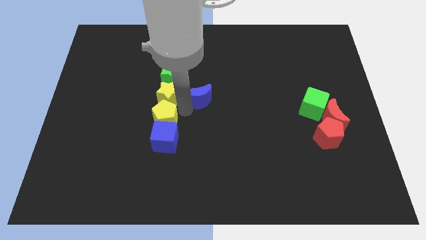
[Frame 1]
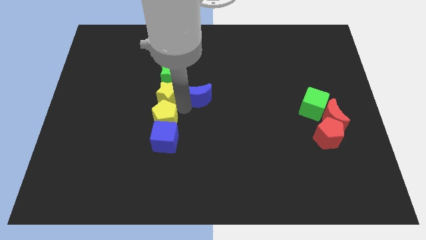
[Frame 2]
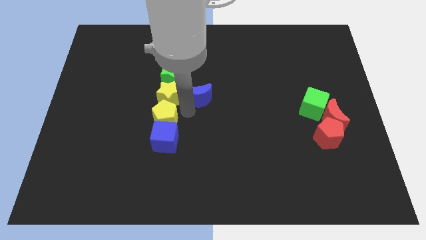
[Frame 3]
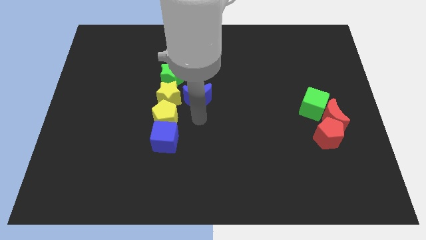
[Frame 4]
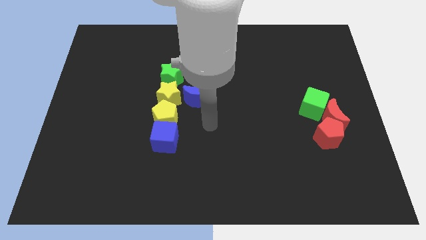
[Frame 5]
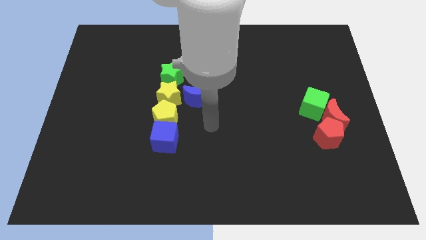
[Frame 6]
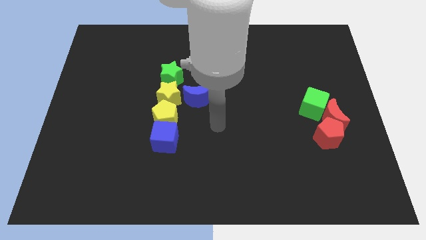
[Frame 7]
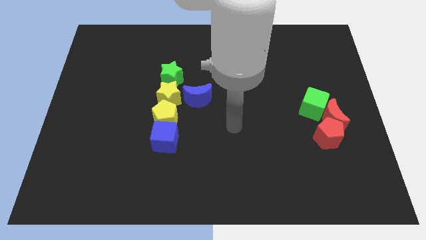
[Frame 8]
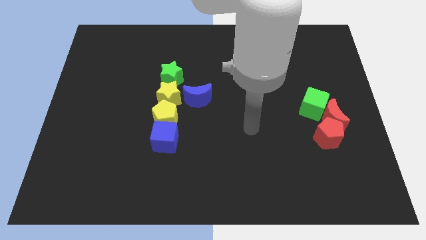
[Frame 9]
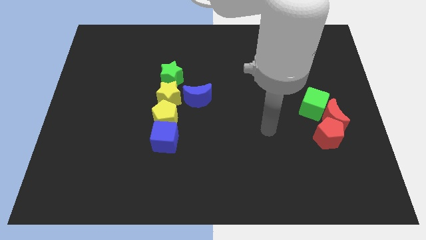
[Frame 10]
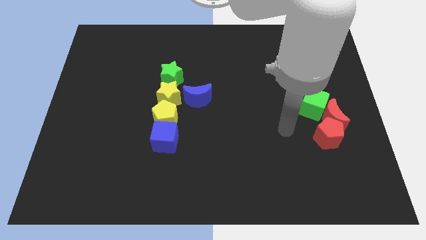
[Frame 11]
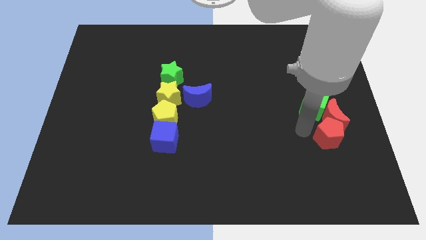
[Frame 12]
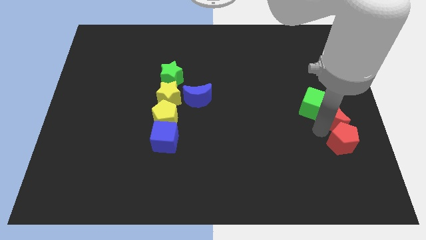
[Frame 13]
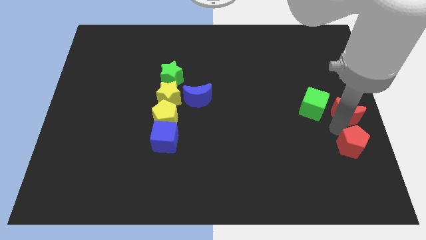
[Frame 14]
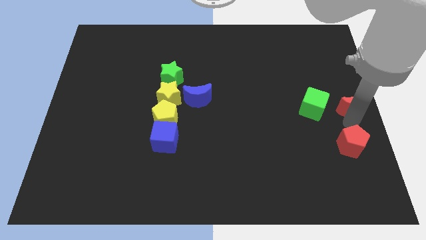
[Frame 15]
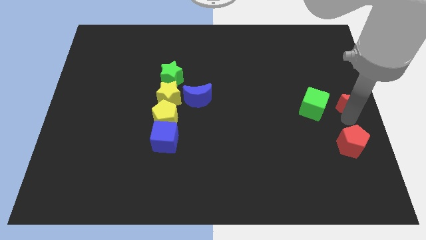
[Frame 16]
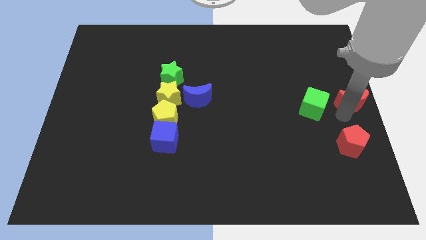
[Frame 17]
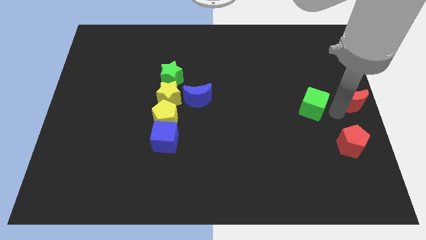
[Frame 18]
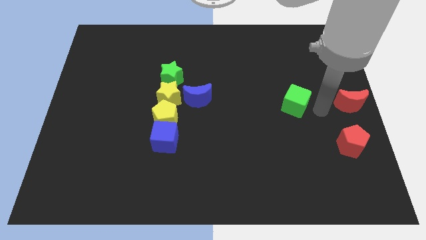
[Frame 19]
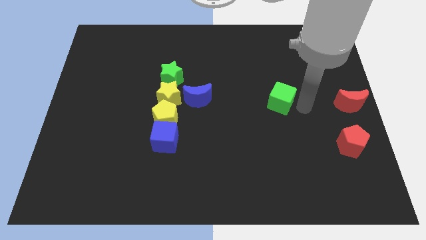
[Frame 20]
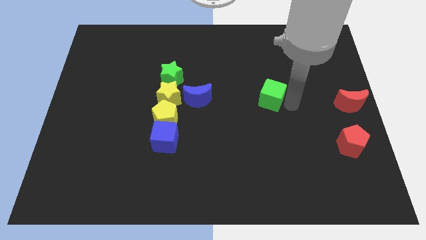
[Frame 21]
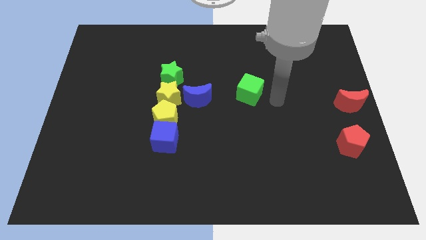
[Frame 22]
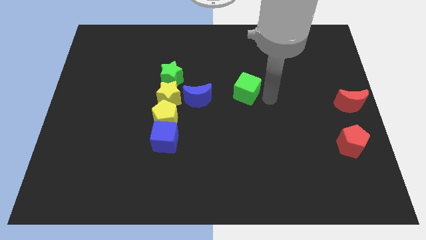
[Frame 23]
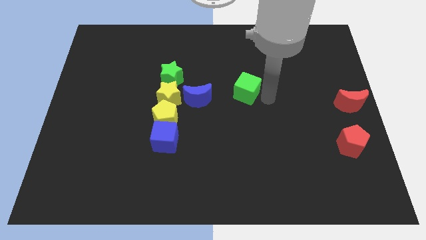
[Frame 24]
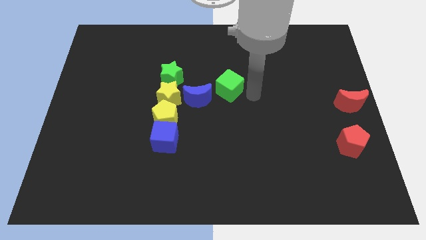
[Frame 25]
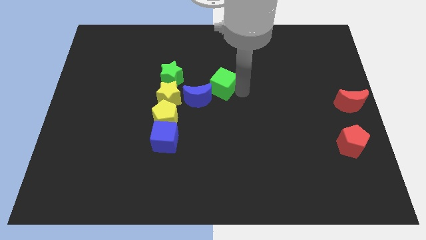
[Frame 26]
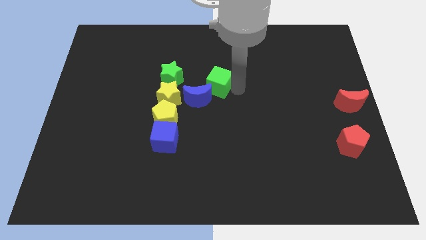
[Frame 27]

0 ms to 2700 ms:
move the green cube right to the blue moon

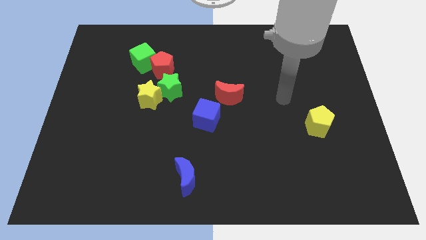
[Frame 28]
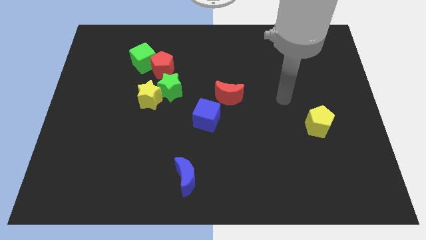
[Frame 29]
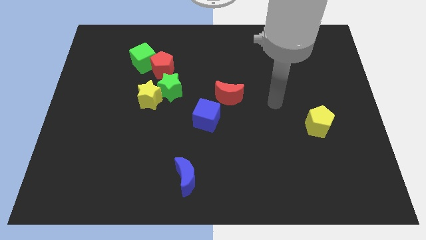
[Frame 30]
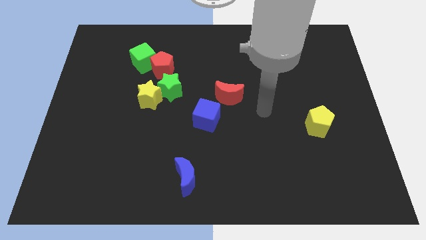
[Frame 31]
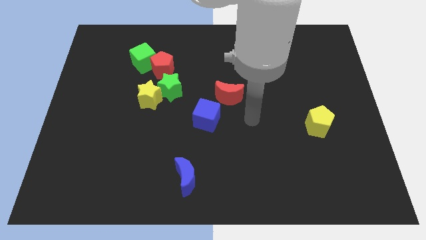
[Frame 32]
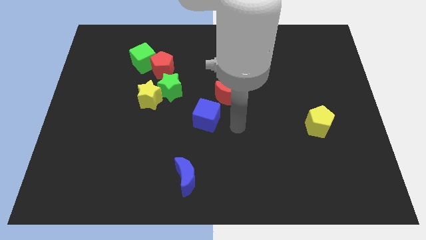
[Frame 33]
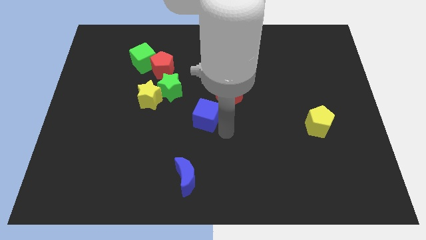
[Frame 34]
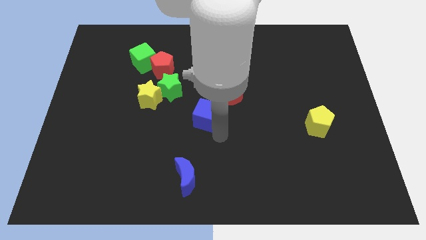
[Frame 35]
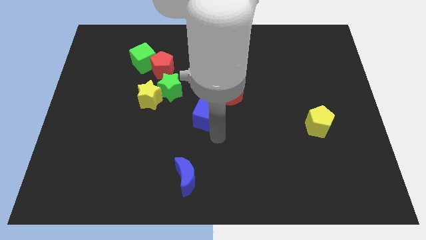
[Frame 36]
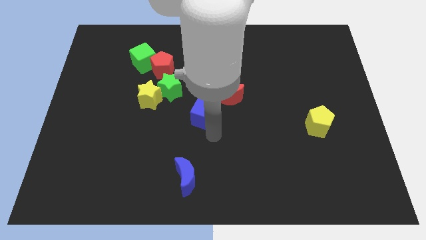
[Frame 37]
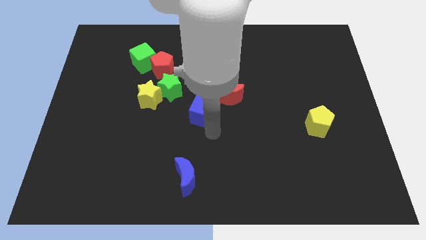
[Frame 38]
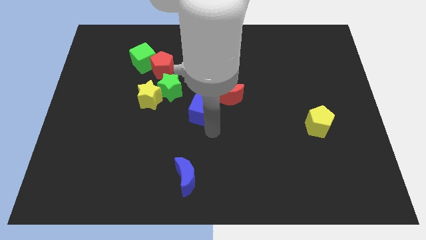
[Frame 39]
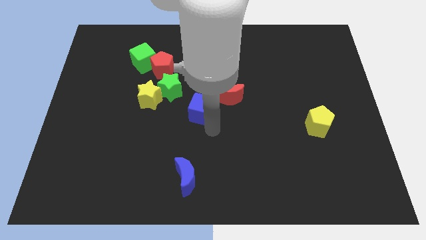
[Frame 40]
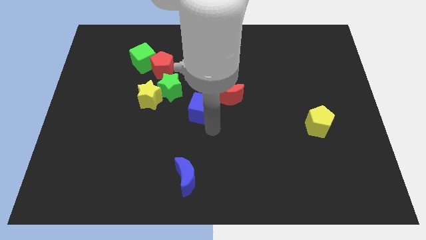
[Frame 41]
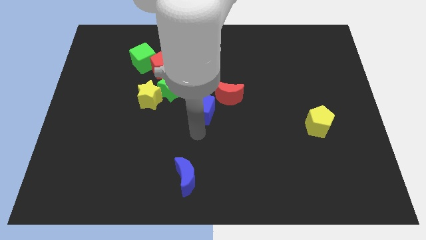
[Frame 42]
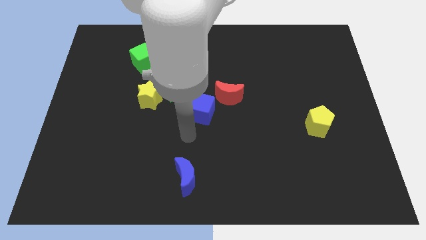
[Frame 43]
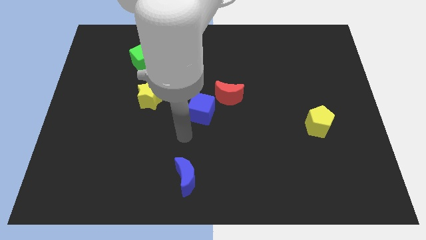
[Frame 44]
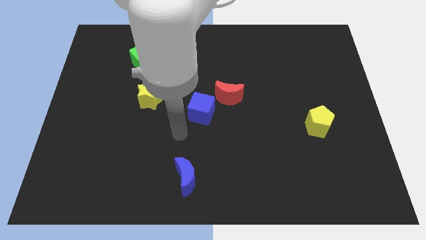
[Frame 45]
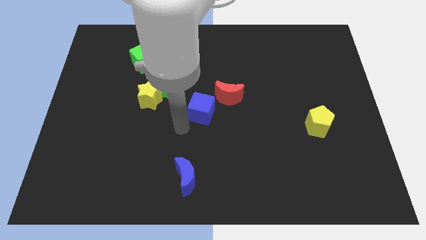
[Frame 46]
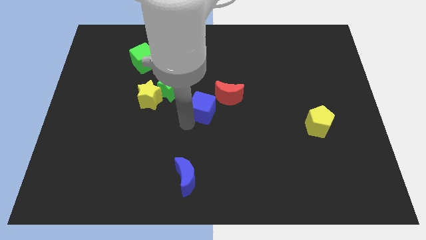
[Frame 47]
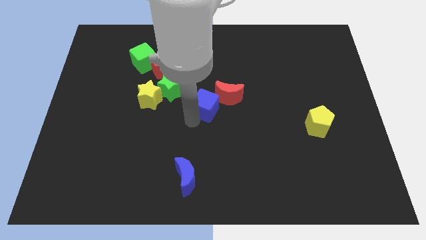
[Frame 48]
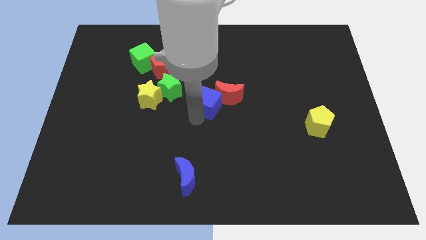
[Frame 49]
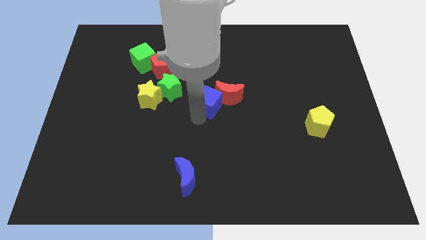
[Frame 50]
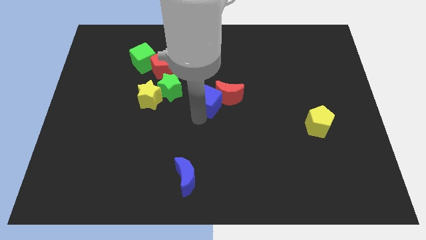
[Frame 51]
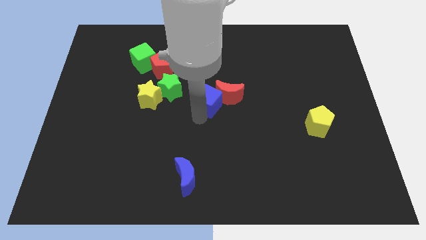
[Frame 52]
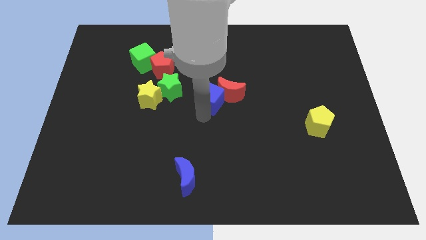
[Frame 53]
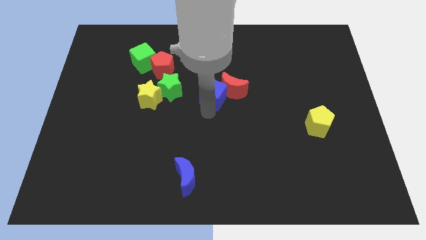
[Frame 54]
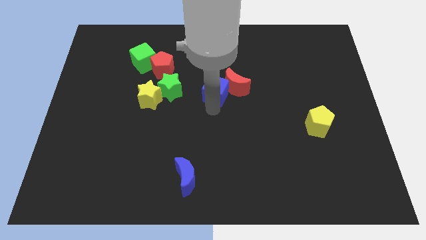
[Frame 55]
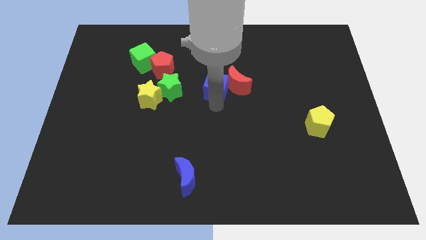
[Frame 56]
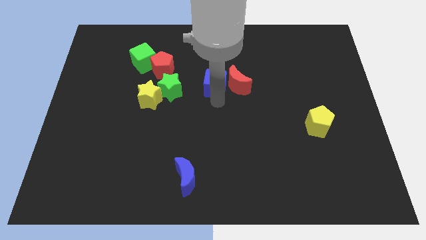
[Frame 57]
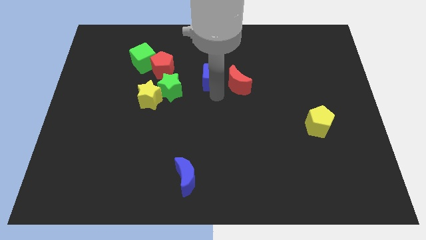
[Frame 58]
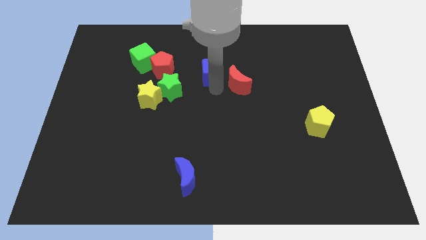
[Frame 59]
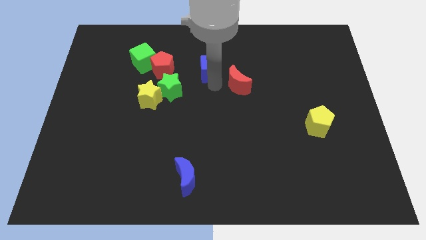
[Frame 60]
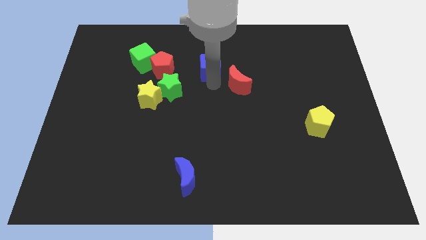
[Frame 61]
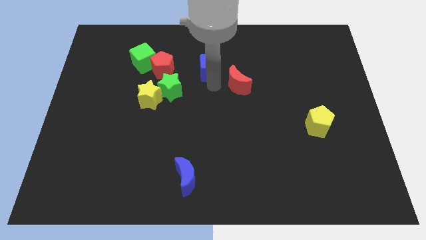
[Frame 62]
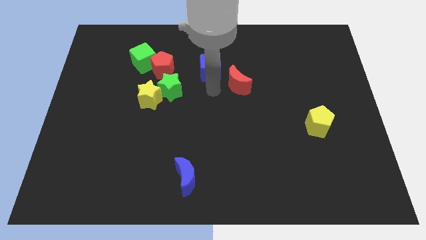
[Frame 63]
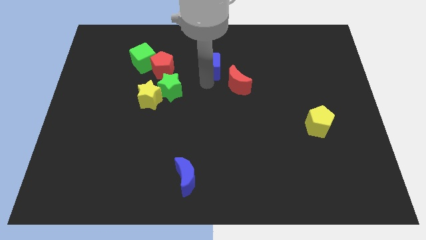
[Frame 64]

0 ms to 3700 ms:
place blue cube to the right of red pentagon

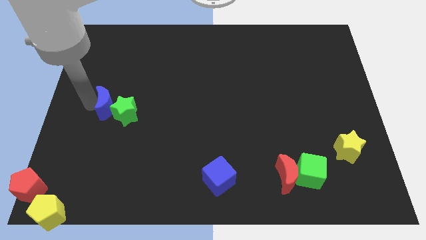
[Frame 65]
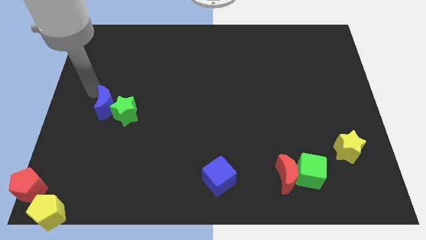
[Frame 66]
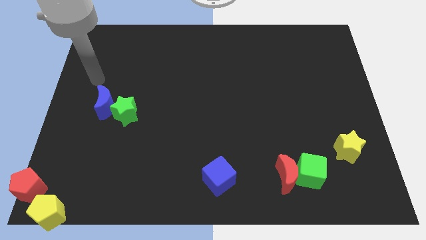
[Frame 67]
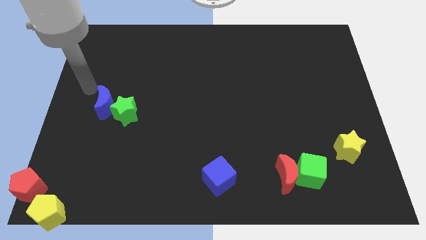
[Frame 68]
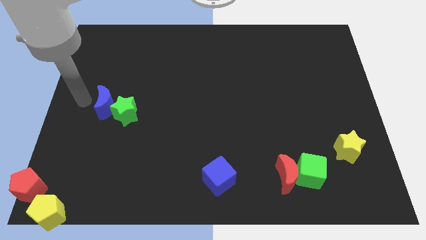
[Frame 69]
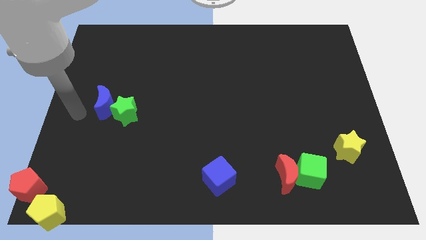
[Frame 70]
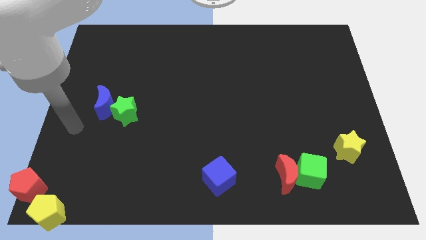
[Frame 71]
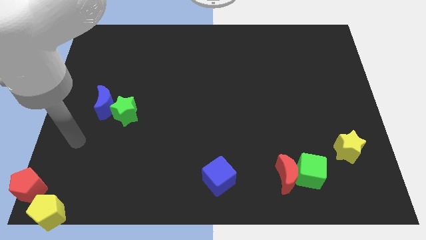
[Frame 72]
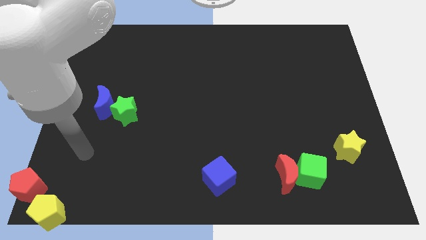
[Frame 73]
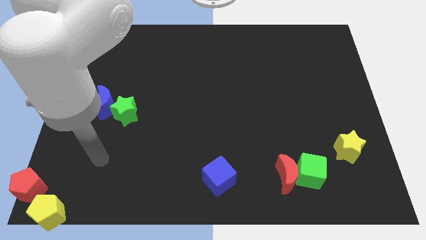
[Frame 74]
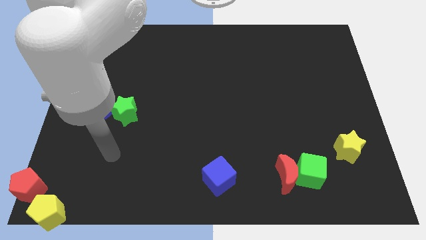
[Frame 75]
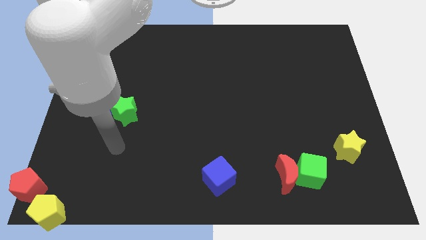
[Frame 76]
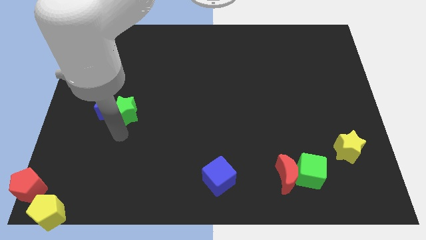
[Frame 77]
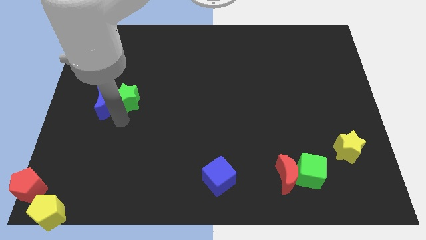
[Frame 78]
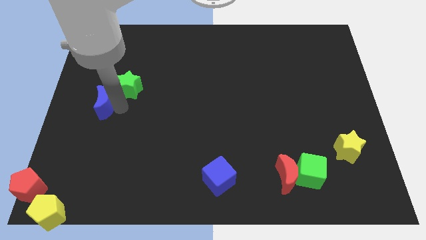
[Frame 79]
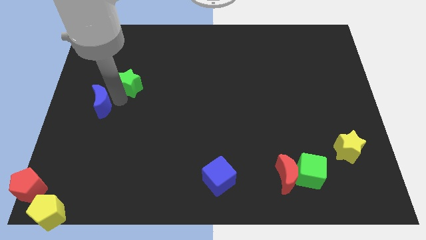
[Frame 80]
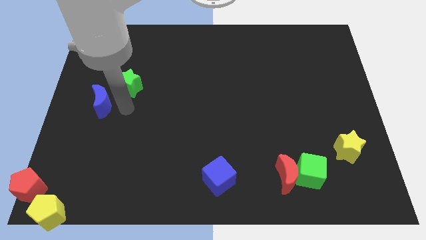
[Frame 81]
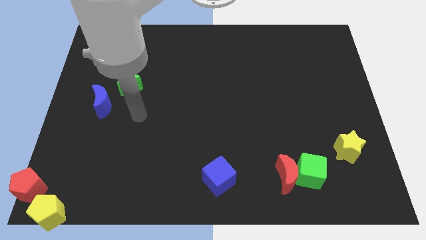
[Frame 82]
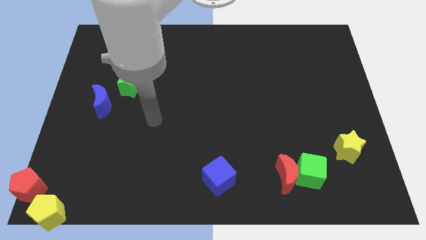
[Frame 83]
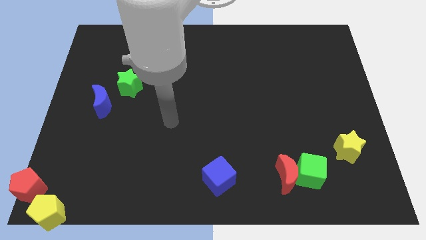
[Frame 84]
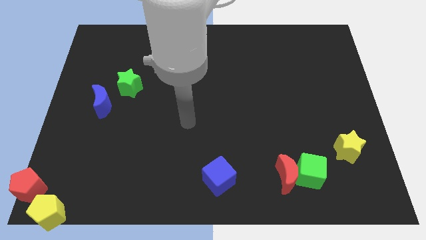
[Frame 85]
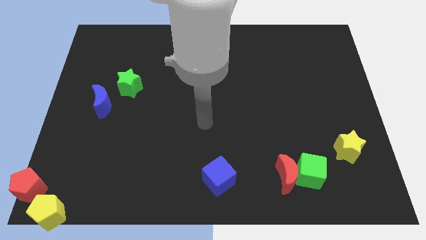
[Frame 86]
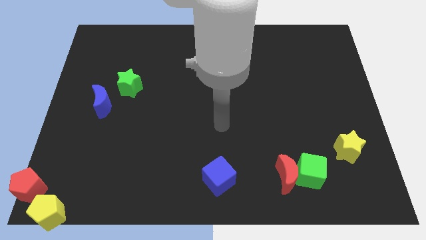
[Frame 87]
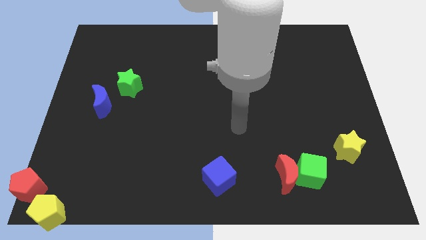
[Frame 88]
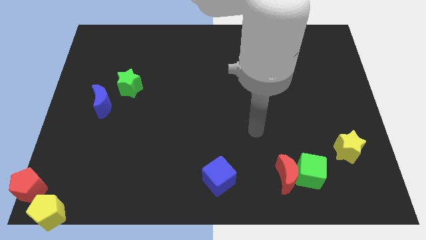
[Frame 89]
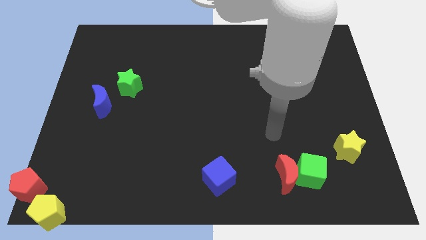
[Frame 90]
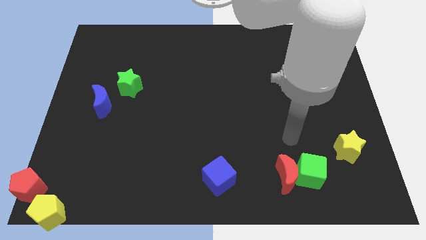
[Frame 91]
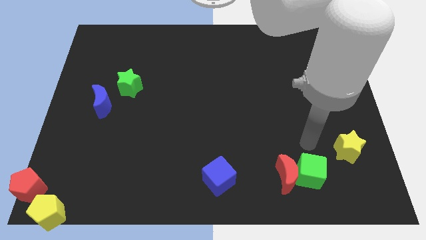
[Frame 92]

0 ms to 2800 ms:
push green star slightly upwards
